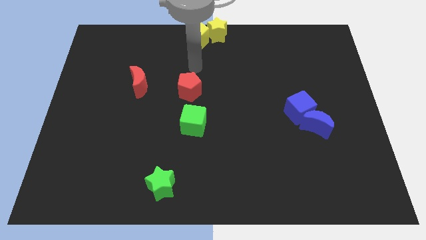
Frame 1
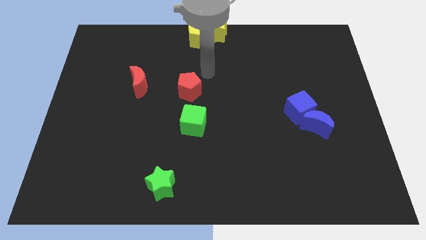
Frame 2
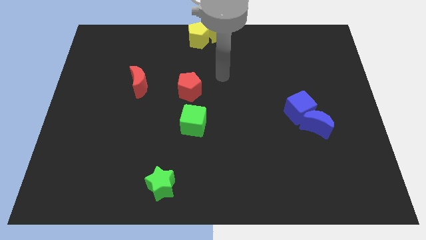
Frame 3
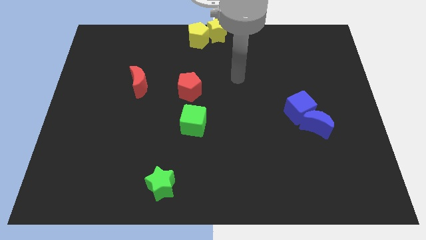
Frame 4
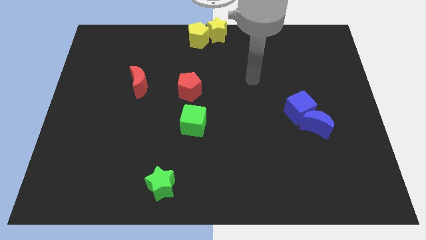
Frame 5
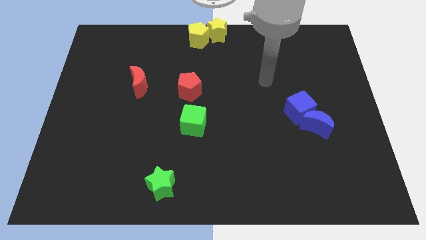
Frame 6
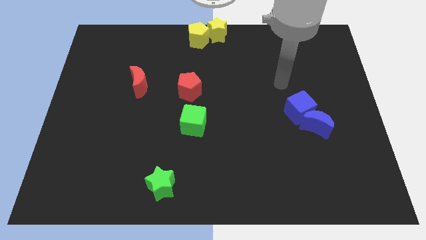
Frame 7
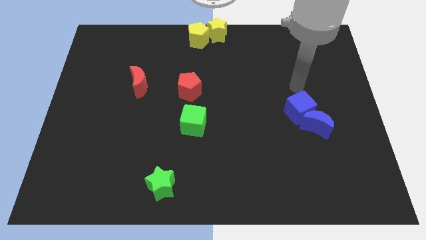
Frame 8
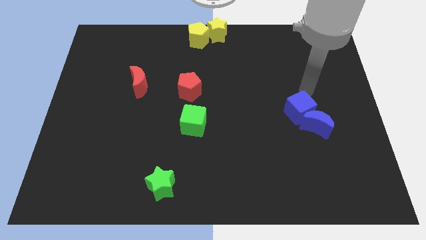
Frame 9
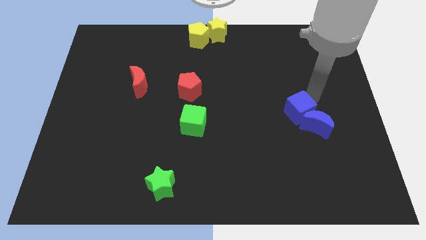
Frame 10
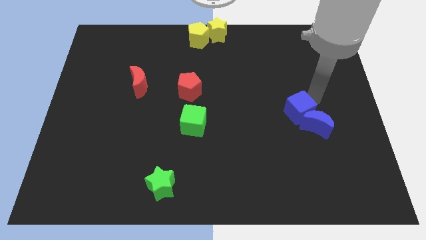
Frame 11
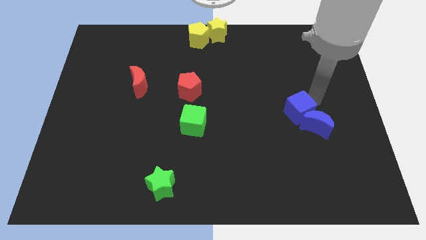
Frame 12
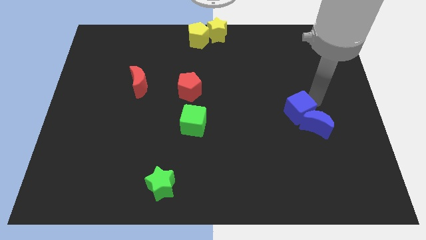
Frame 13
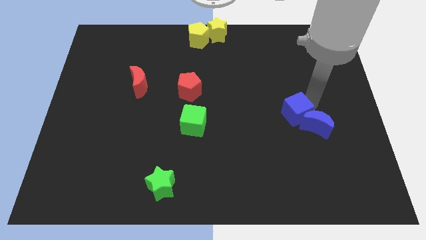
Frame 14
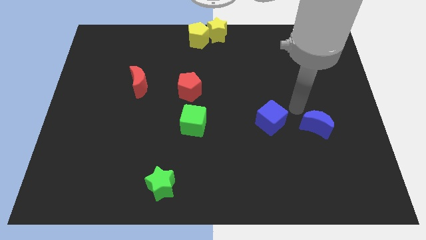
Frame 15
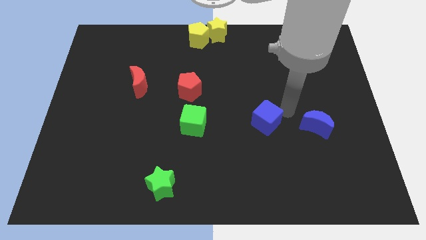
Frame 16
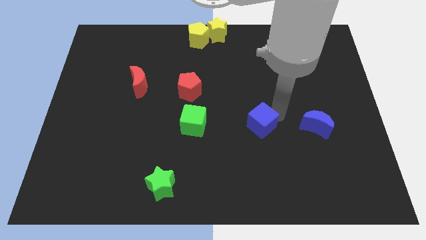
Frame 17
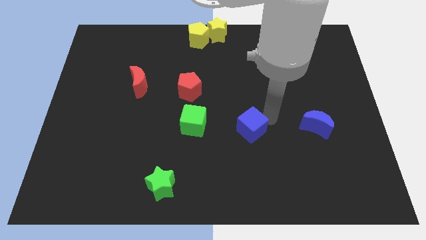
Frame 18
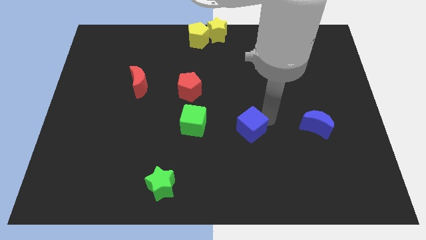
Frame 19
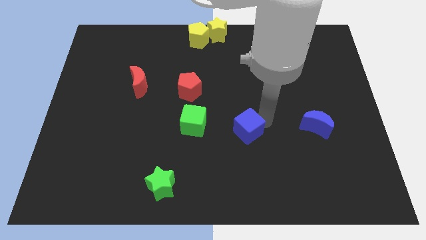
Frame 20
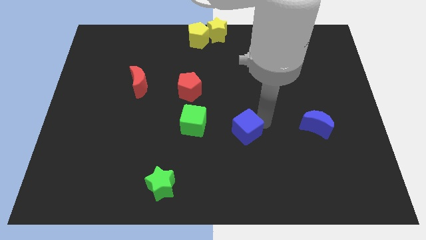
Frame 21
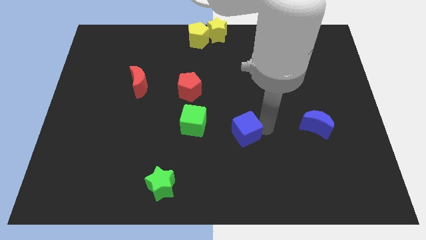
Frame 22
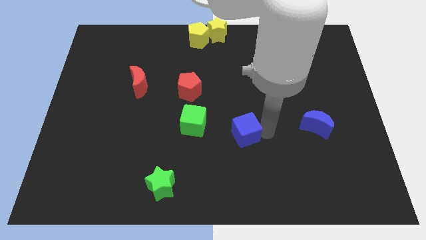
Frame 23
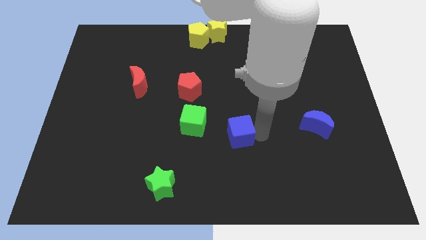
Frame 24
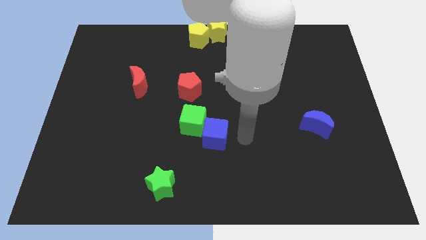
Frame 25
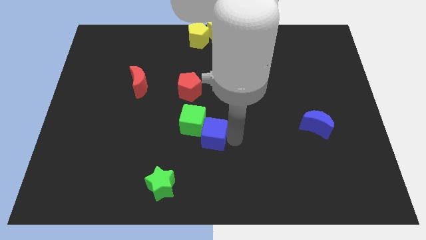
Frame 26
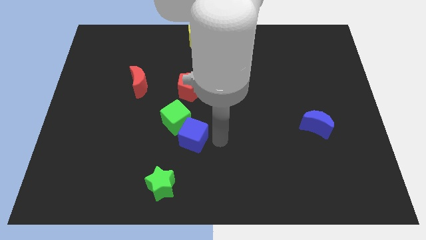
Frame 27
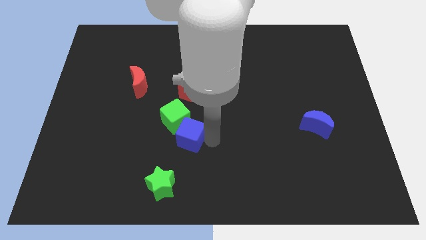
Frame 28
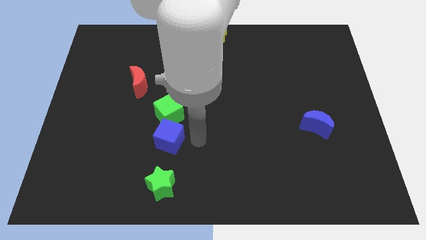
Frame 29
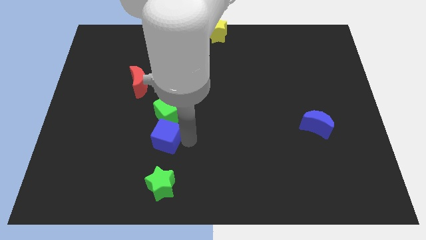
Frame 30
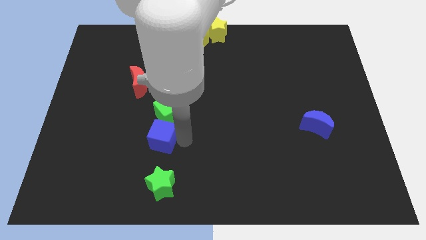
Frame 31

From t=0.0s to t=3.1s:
move the blue cube below the green cube

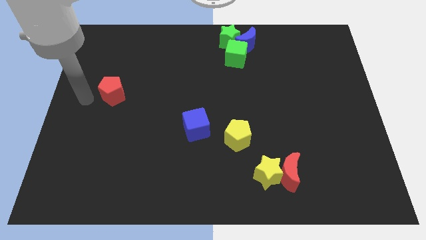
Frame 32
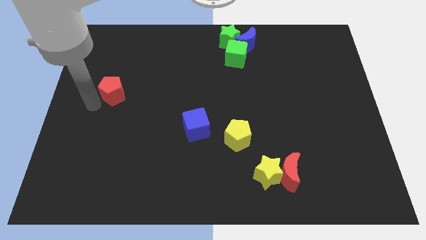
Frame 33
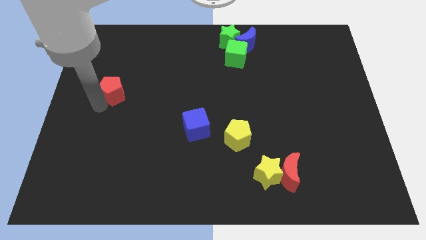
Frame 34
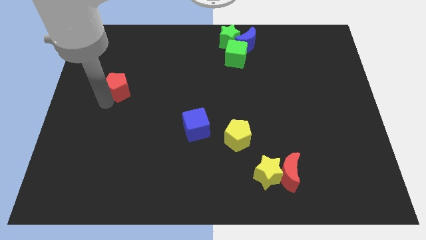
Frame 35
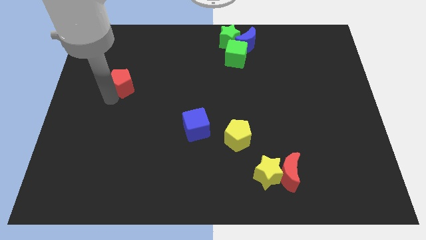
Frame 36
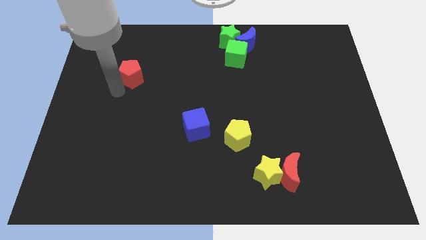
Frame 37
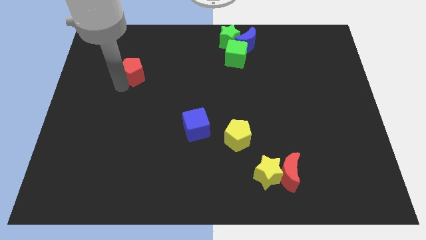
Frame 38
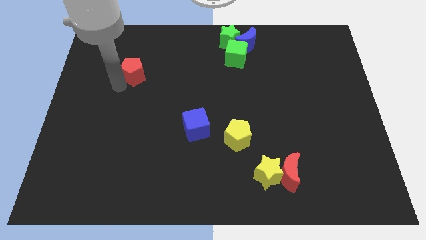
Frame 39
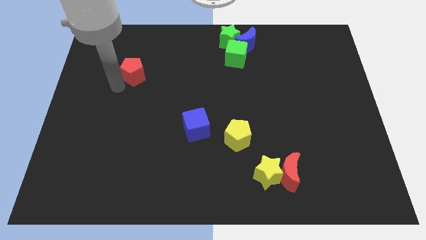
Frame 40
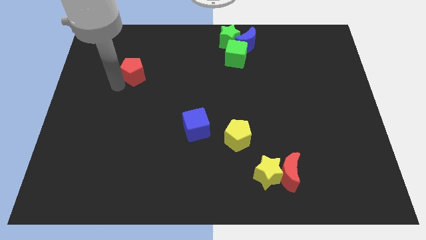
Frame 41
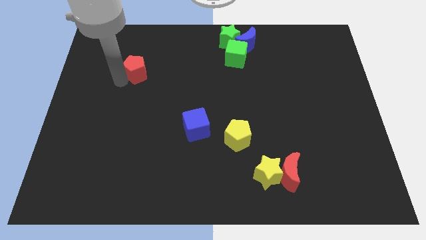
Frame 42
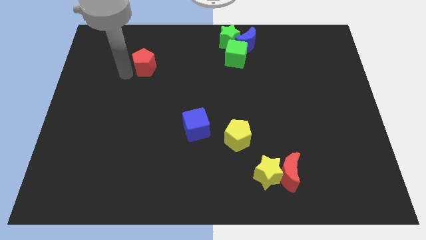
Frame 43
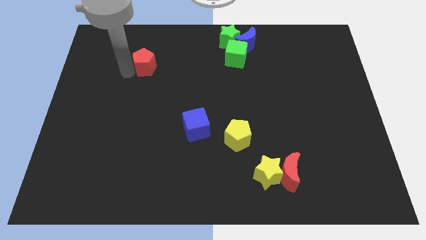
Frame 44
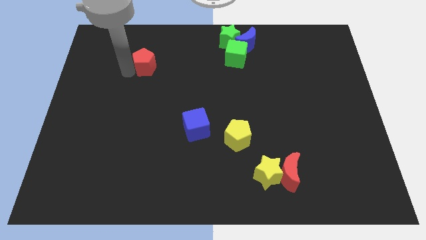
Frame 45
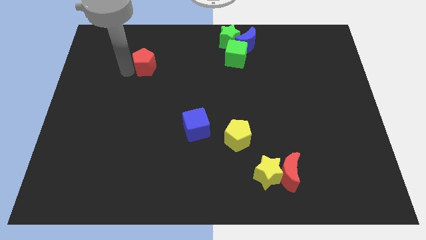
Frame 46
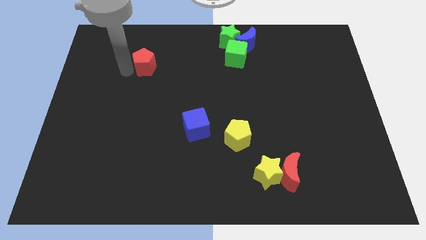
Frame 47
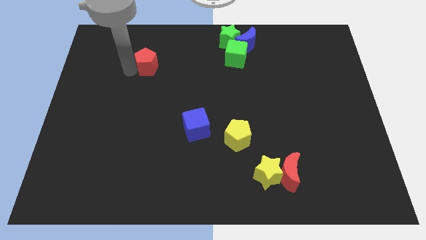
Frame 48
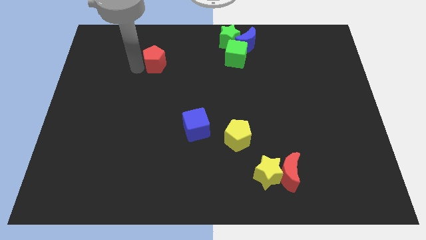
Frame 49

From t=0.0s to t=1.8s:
push the red pentagon towards the top center of the board

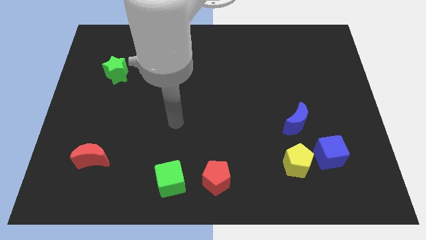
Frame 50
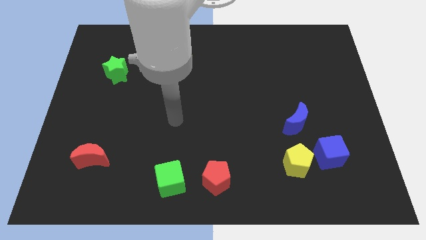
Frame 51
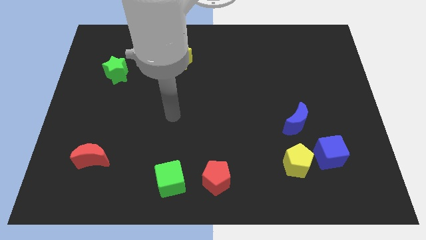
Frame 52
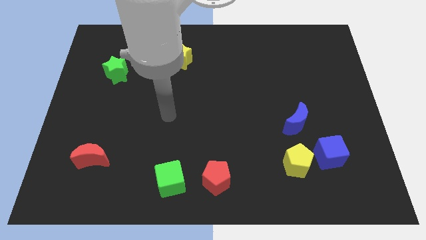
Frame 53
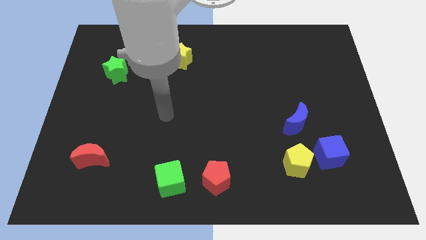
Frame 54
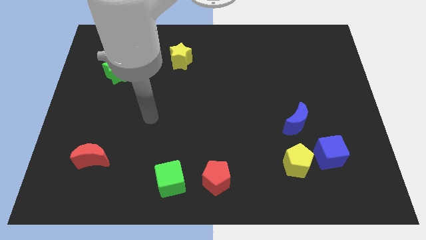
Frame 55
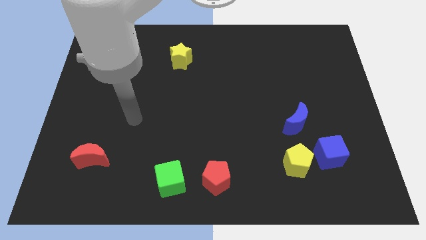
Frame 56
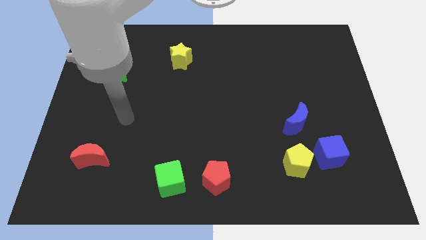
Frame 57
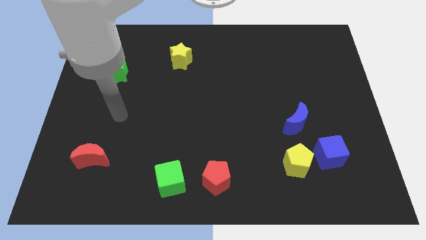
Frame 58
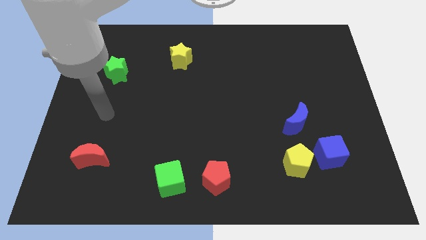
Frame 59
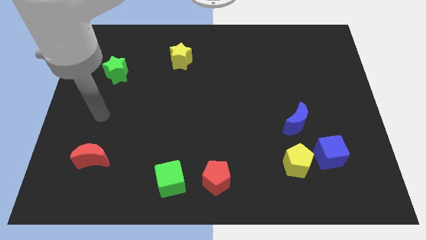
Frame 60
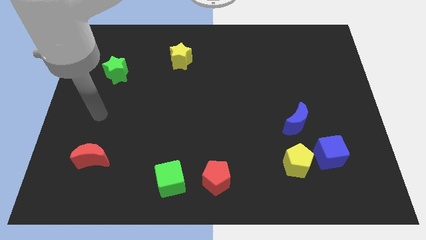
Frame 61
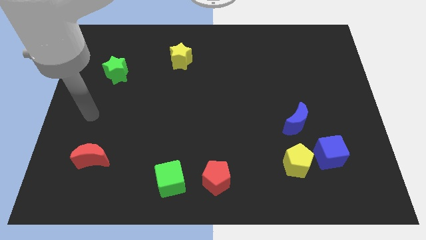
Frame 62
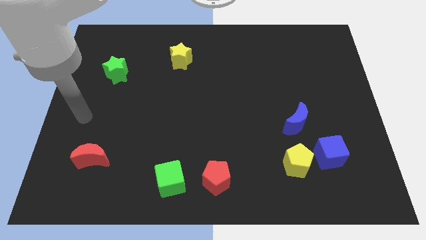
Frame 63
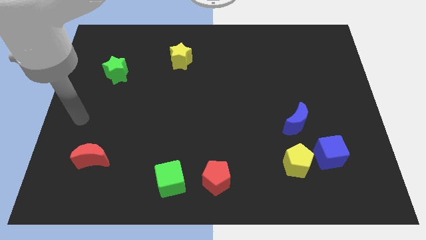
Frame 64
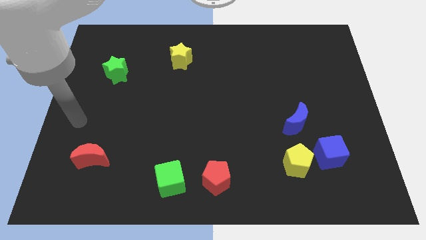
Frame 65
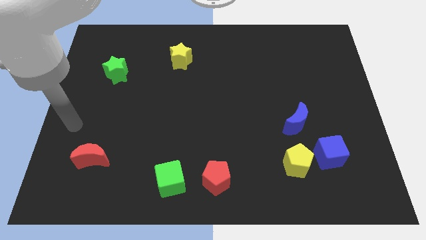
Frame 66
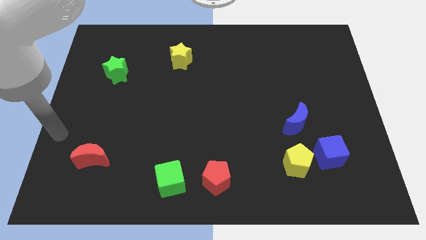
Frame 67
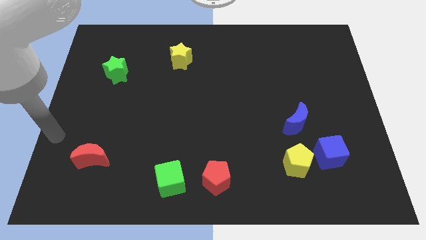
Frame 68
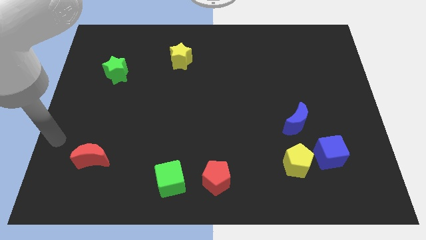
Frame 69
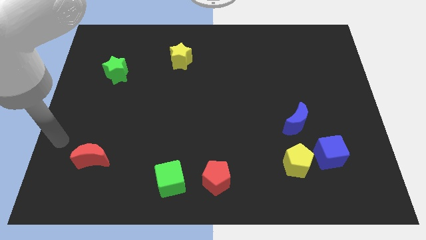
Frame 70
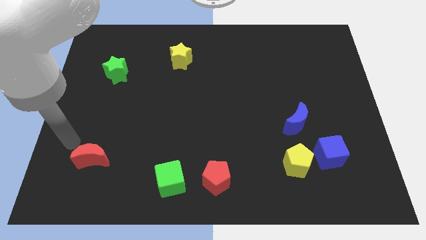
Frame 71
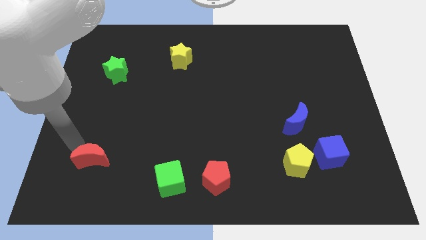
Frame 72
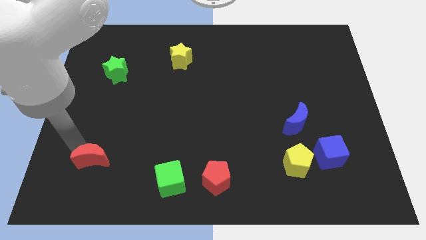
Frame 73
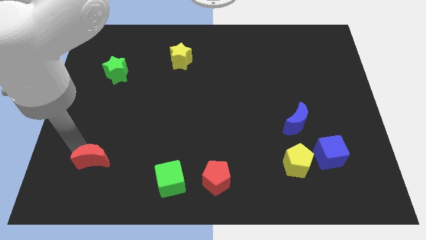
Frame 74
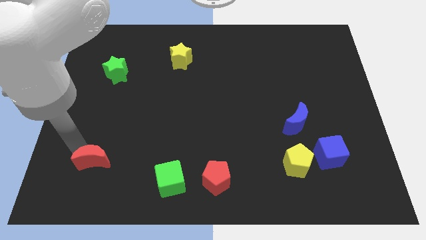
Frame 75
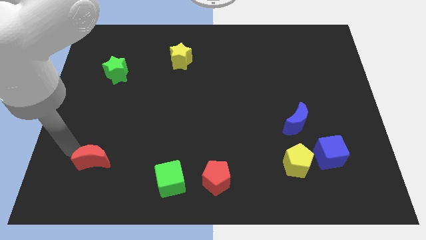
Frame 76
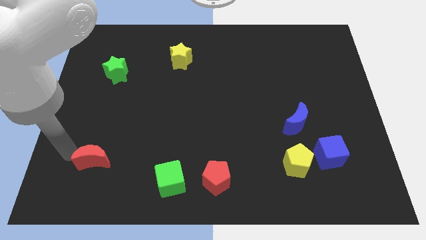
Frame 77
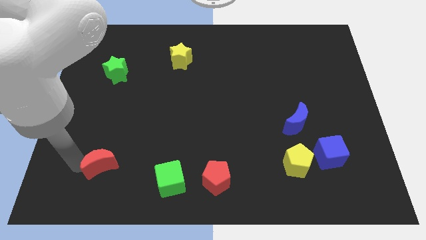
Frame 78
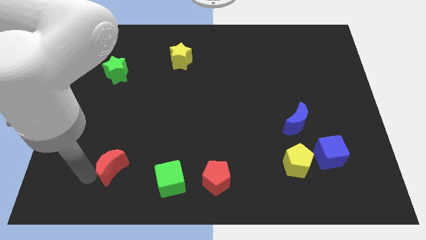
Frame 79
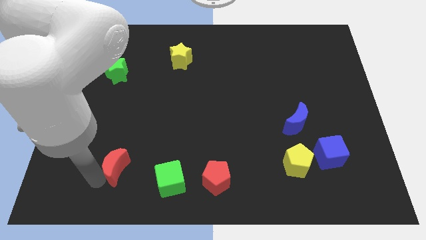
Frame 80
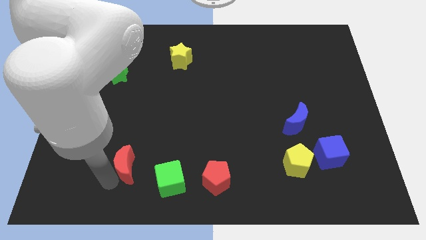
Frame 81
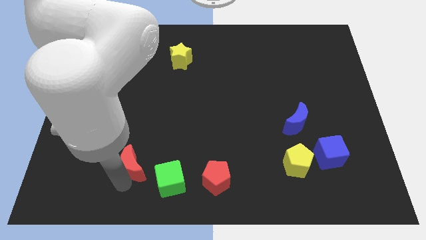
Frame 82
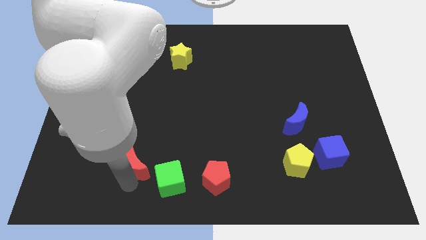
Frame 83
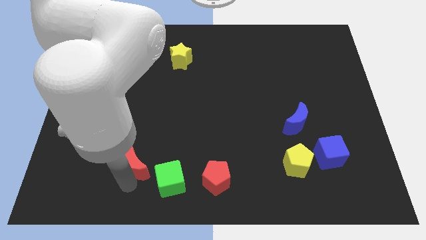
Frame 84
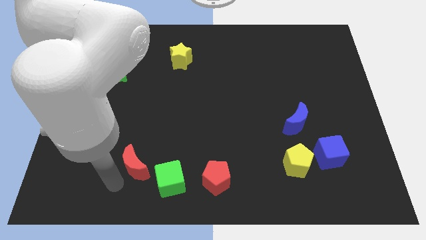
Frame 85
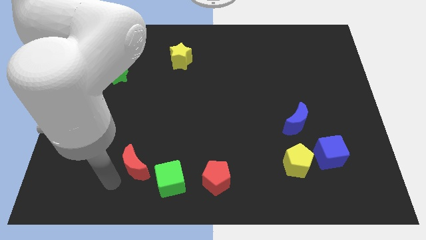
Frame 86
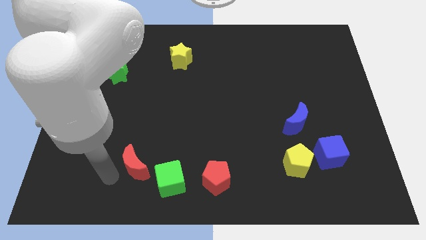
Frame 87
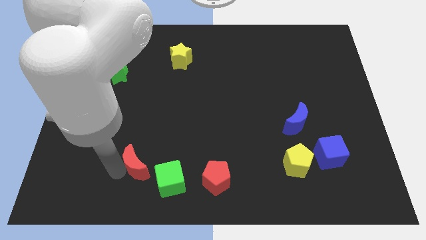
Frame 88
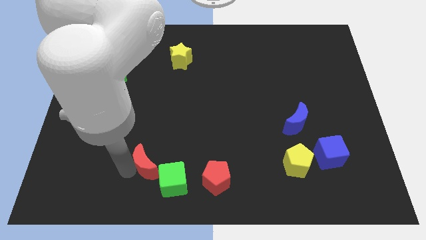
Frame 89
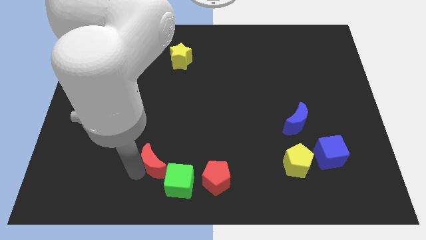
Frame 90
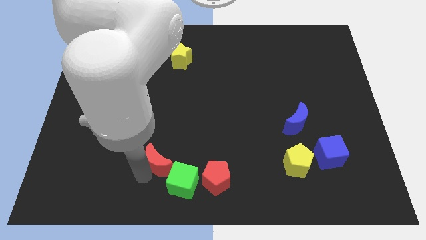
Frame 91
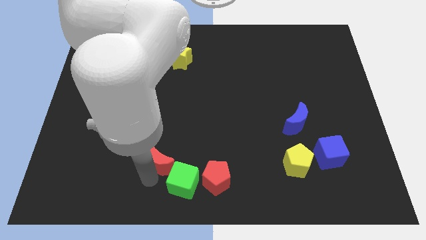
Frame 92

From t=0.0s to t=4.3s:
move the red crescent into the green cube
